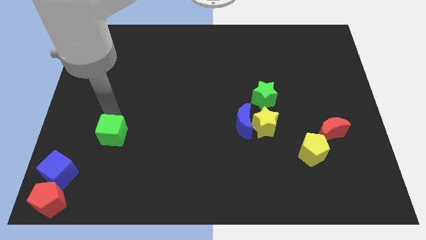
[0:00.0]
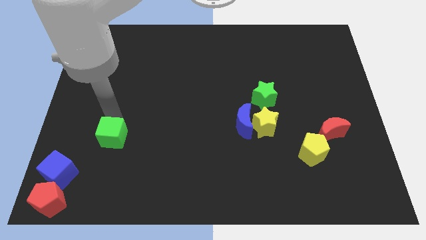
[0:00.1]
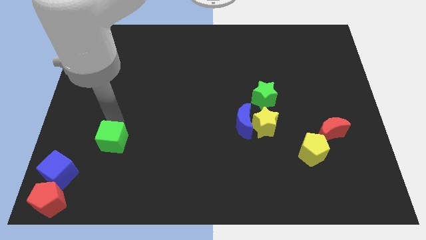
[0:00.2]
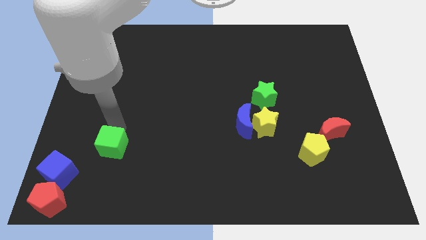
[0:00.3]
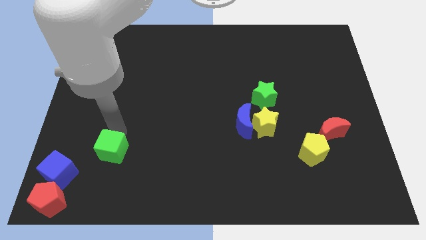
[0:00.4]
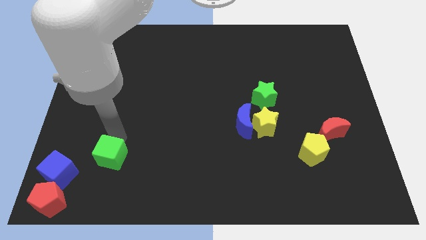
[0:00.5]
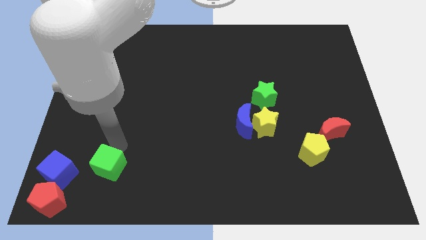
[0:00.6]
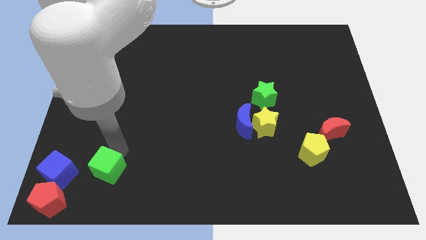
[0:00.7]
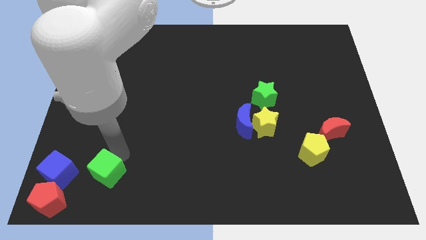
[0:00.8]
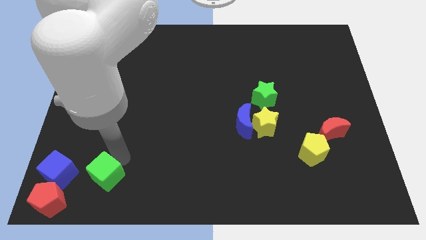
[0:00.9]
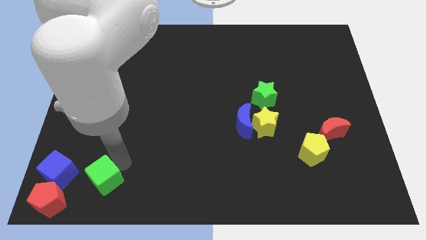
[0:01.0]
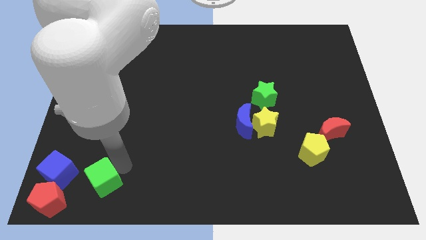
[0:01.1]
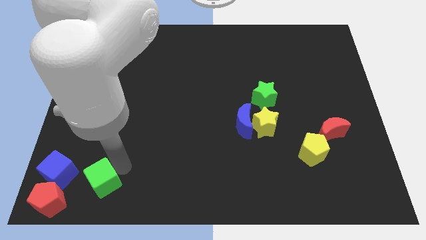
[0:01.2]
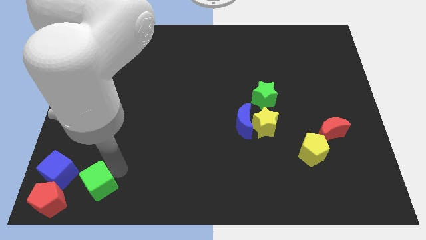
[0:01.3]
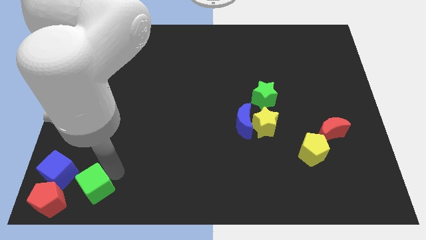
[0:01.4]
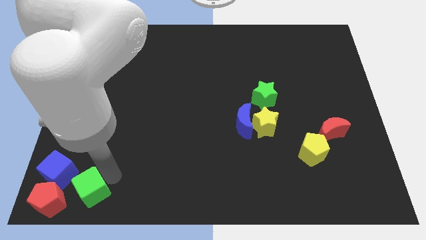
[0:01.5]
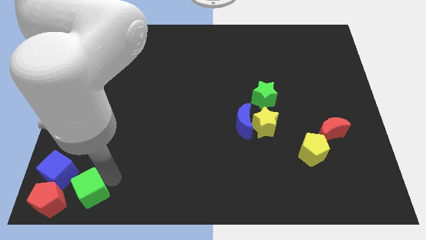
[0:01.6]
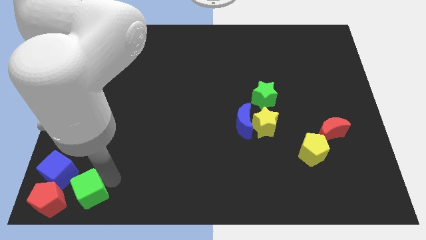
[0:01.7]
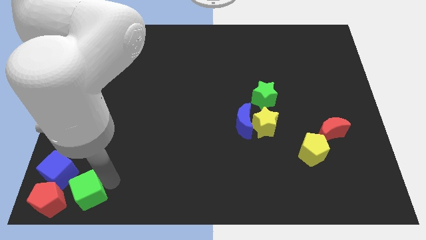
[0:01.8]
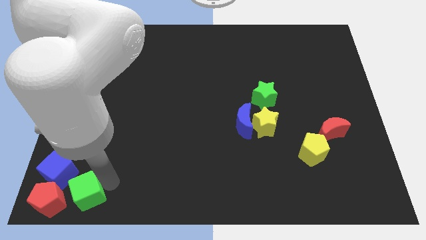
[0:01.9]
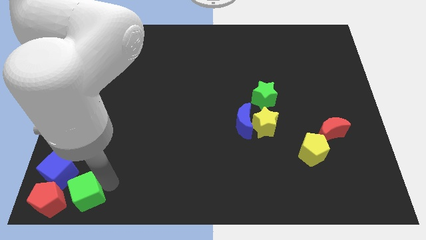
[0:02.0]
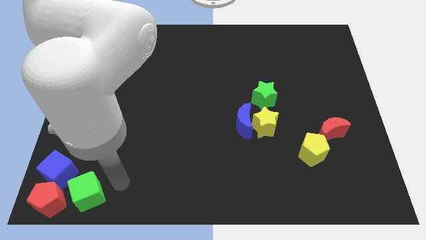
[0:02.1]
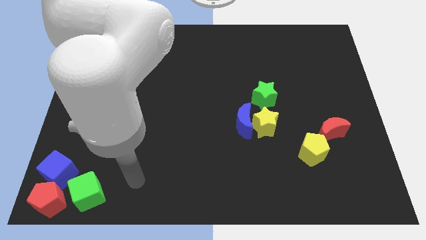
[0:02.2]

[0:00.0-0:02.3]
move the green cube to the bottom left

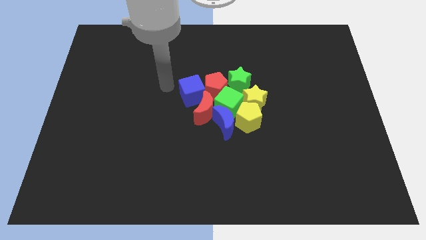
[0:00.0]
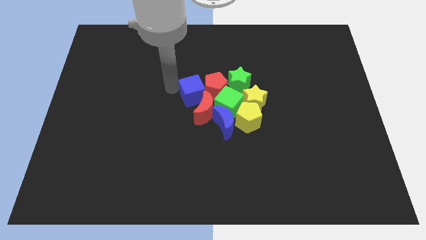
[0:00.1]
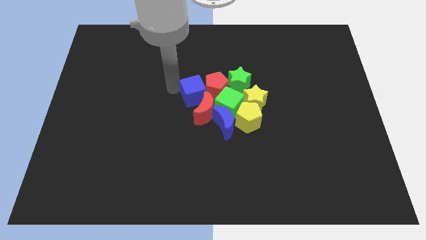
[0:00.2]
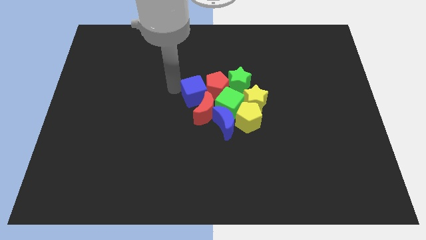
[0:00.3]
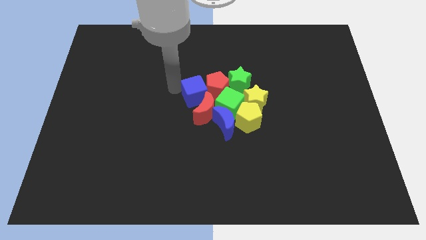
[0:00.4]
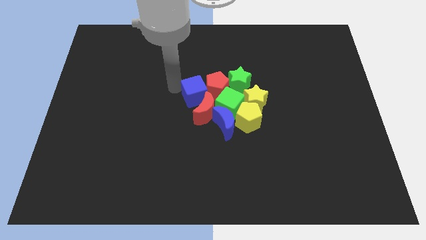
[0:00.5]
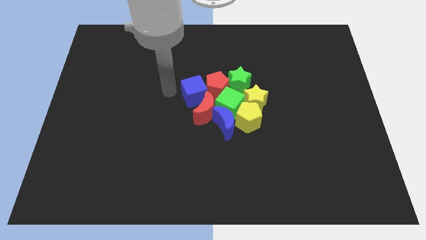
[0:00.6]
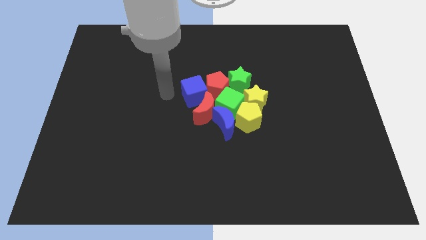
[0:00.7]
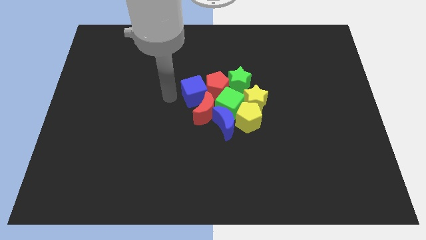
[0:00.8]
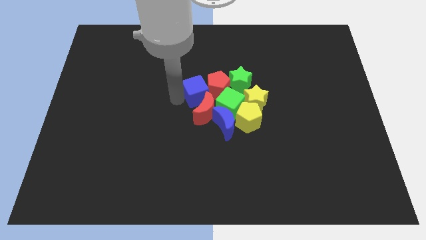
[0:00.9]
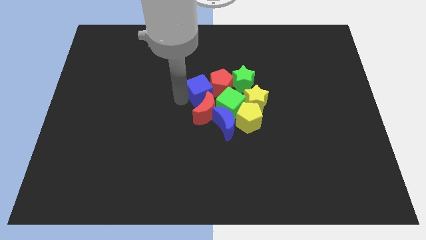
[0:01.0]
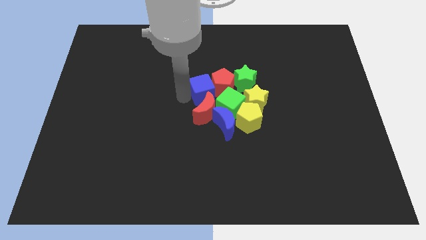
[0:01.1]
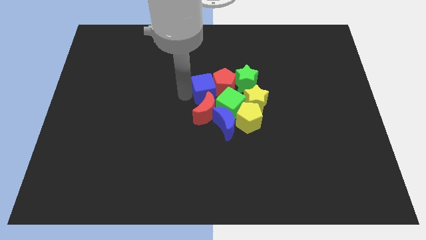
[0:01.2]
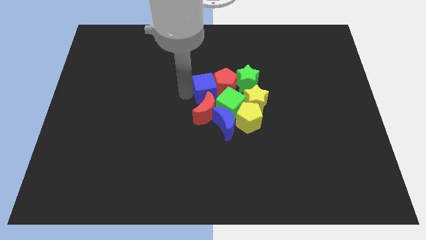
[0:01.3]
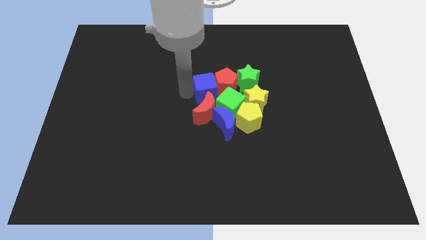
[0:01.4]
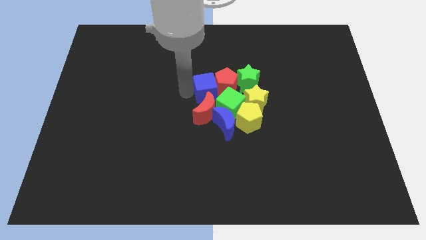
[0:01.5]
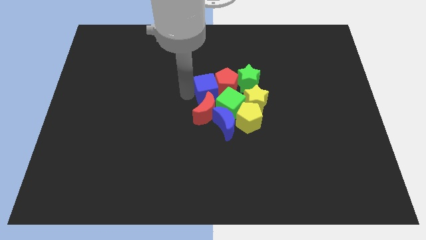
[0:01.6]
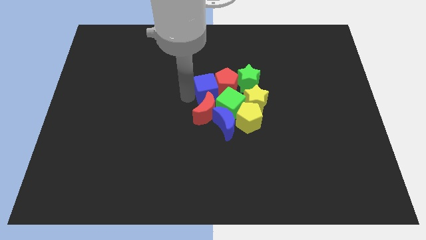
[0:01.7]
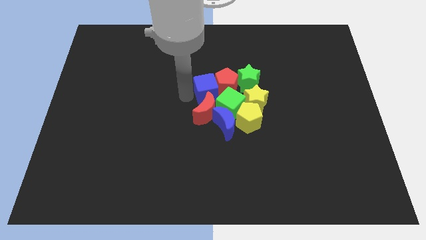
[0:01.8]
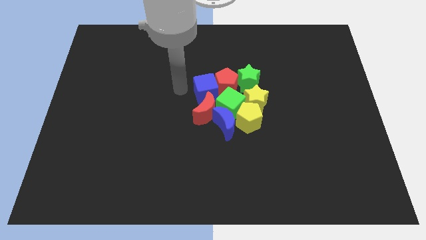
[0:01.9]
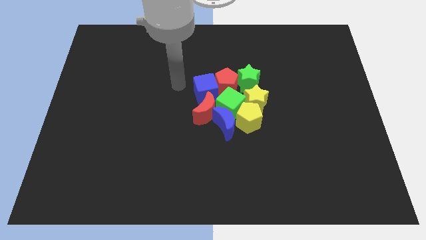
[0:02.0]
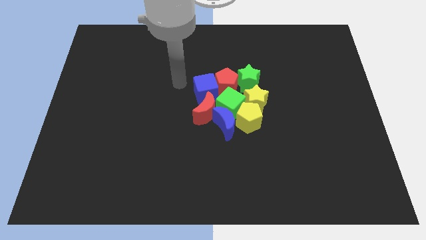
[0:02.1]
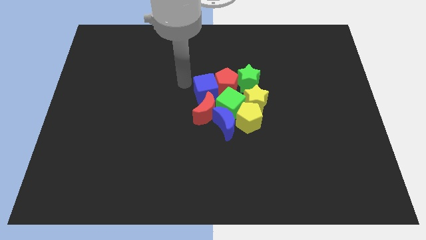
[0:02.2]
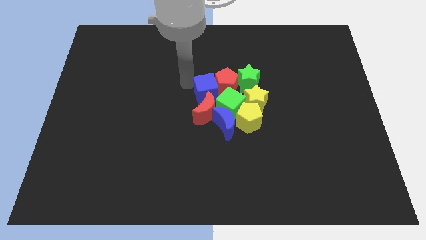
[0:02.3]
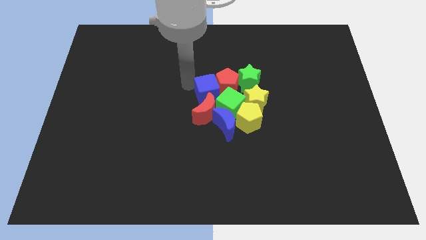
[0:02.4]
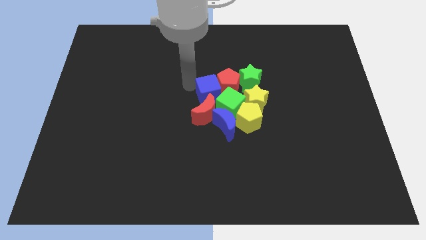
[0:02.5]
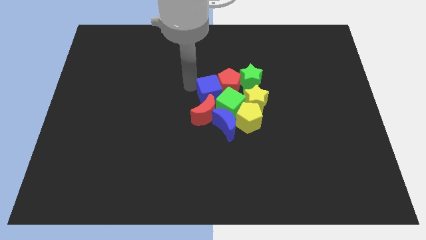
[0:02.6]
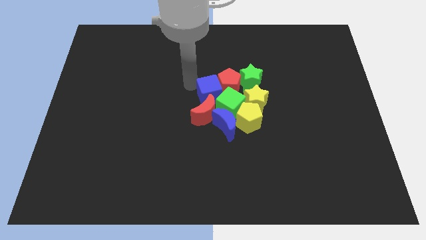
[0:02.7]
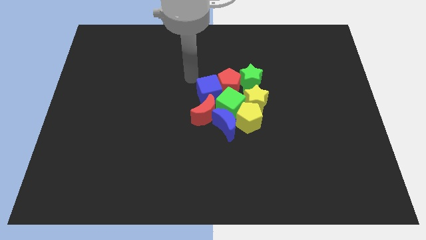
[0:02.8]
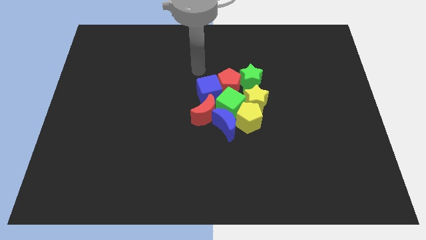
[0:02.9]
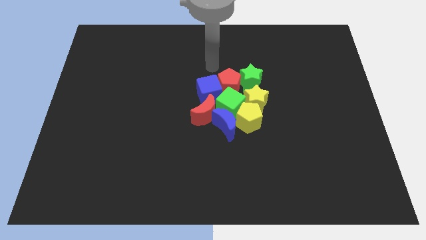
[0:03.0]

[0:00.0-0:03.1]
push blue cube into the group of blocks

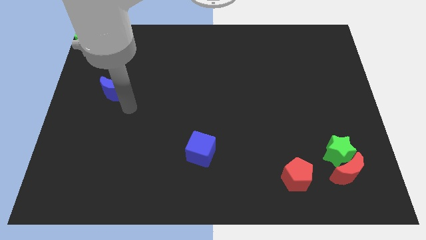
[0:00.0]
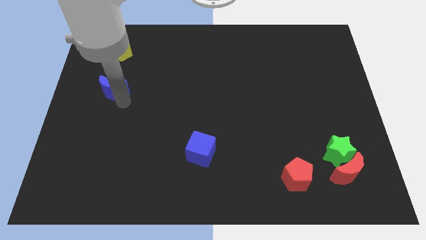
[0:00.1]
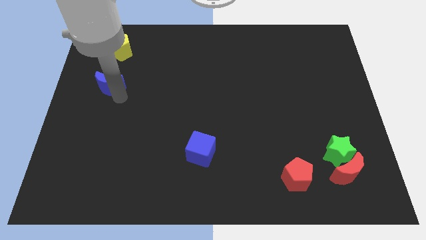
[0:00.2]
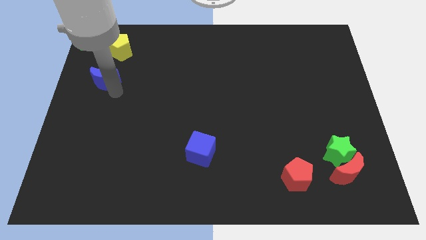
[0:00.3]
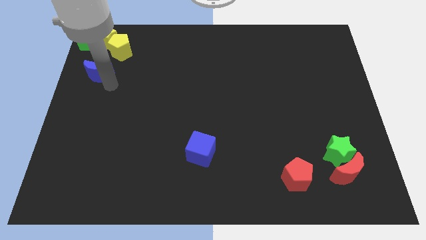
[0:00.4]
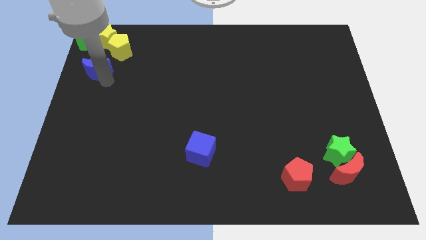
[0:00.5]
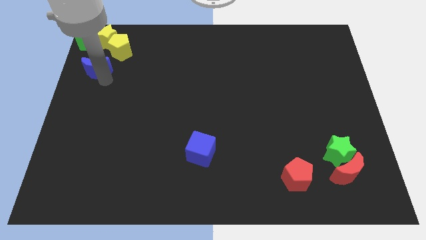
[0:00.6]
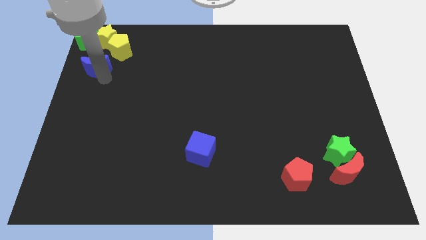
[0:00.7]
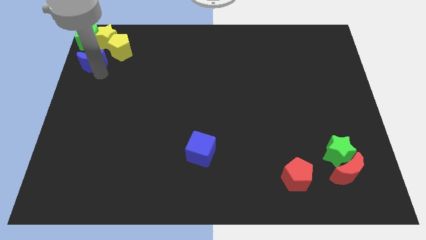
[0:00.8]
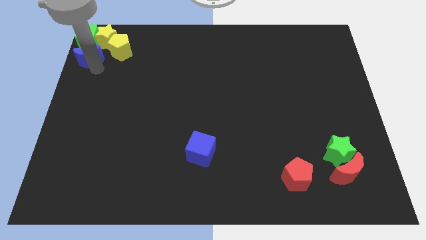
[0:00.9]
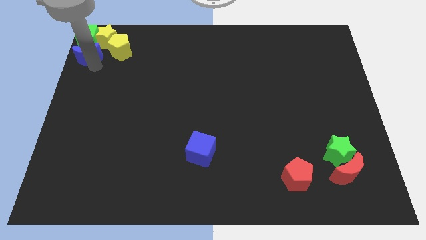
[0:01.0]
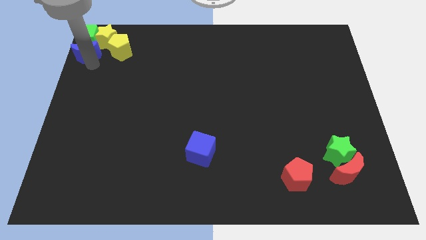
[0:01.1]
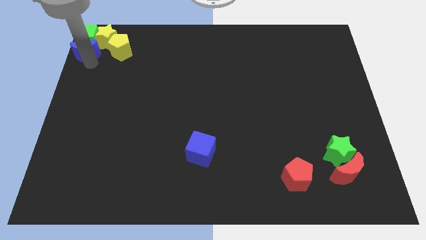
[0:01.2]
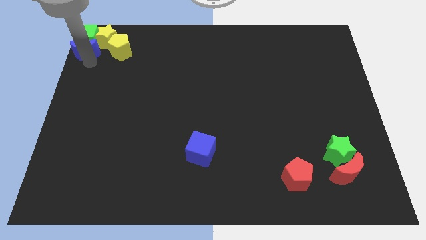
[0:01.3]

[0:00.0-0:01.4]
push the blue crescent under the green cube

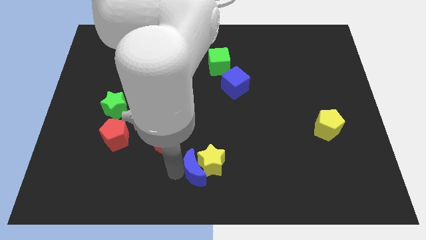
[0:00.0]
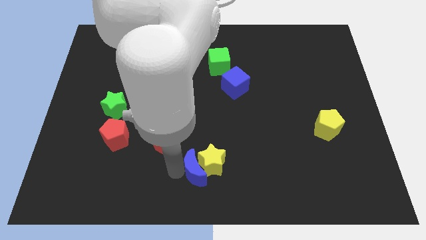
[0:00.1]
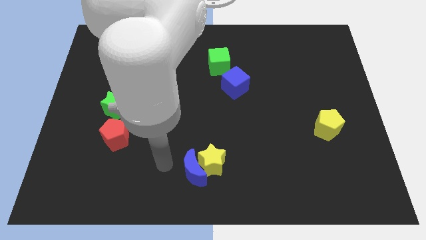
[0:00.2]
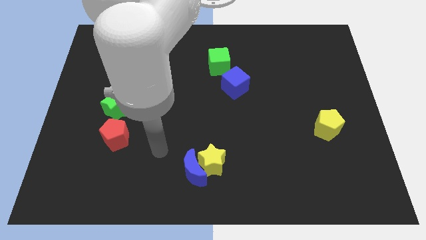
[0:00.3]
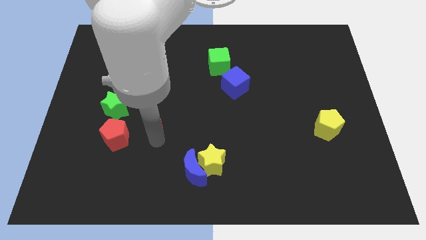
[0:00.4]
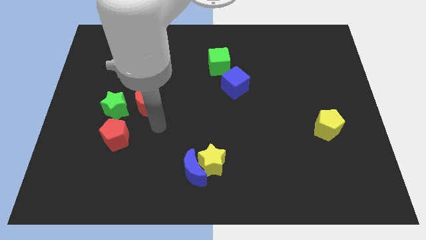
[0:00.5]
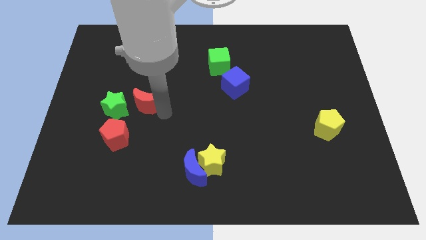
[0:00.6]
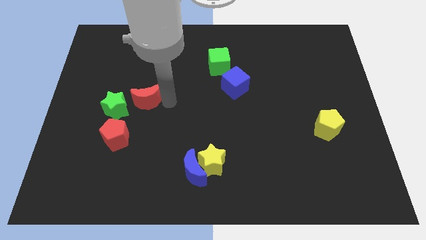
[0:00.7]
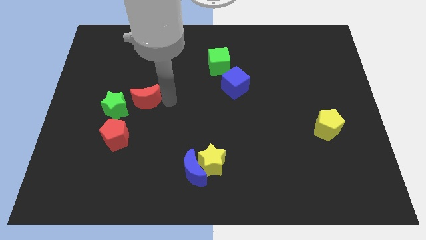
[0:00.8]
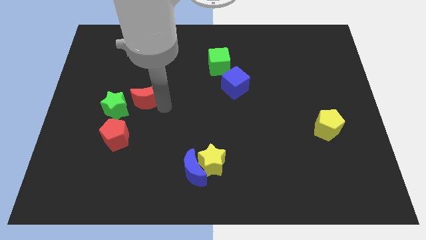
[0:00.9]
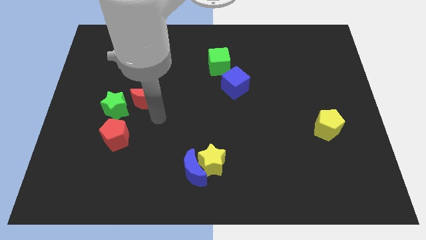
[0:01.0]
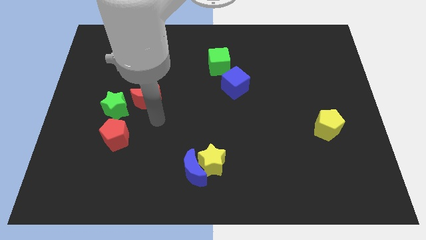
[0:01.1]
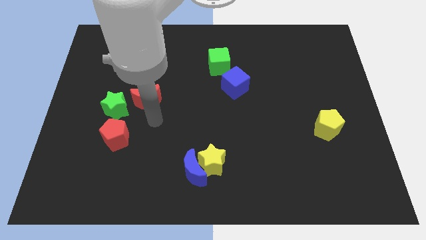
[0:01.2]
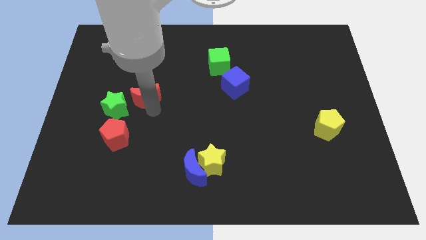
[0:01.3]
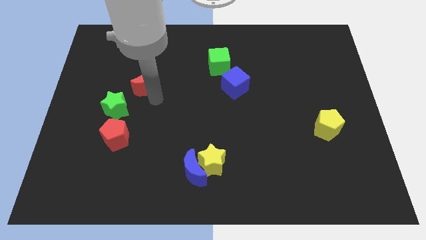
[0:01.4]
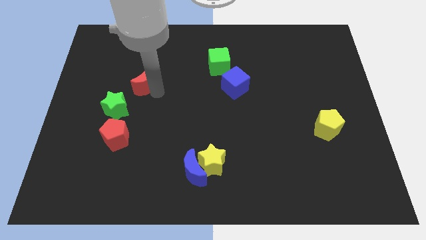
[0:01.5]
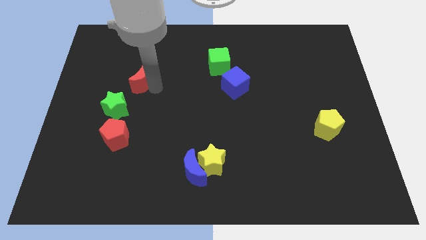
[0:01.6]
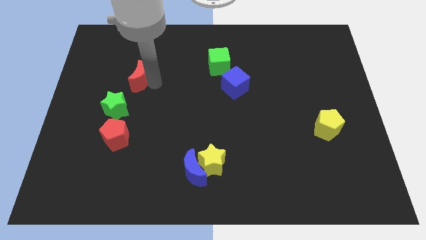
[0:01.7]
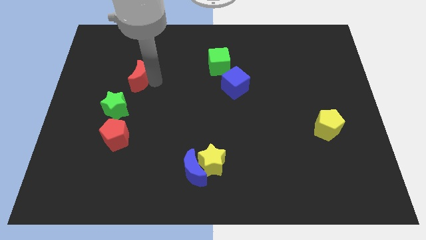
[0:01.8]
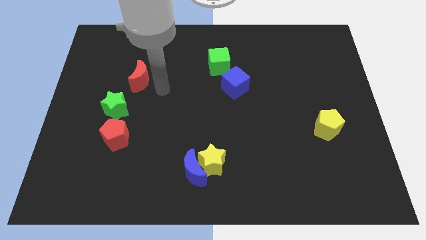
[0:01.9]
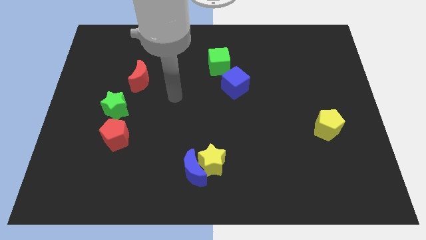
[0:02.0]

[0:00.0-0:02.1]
slide the red moon towards the top of green star
